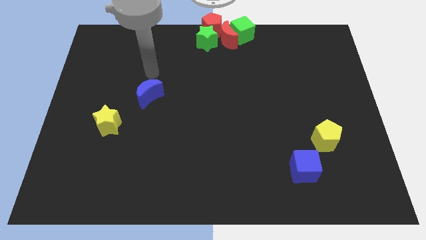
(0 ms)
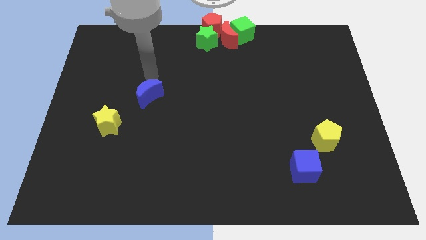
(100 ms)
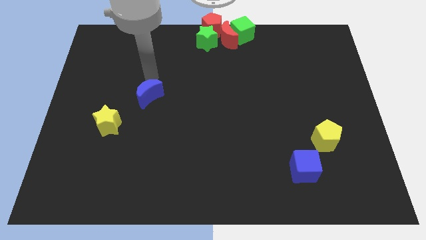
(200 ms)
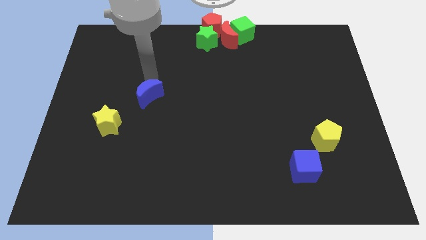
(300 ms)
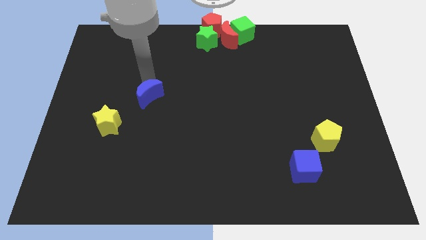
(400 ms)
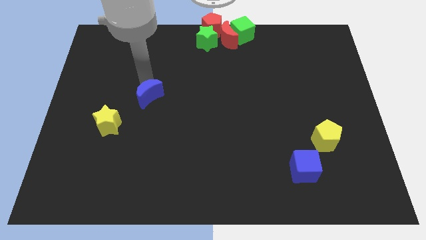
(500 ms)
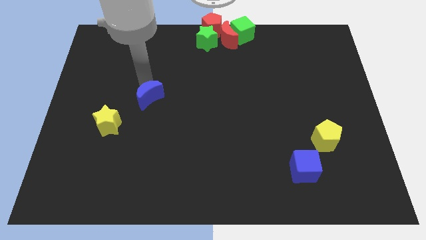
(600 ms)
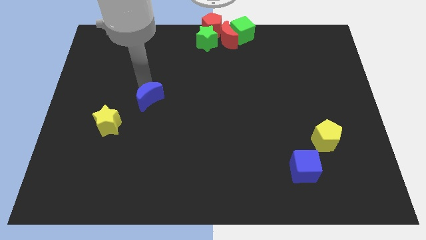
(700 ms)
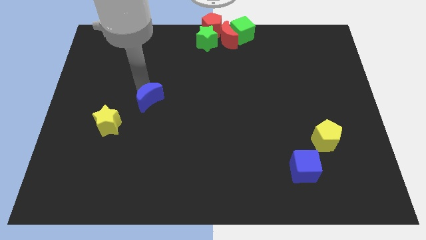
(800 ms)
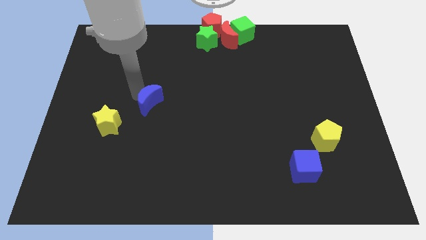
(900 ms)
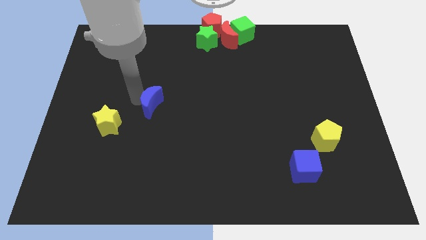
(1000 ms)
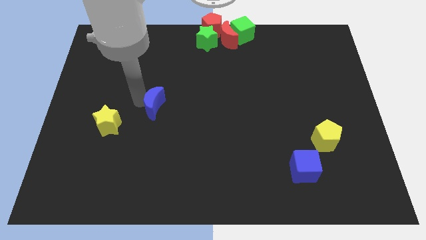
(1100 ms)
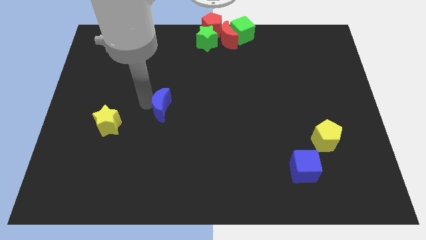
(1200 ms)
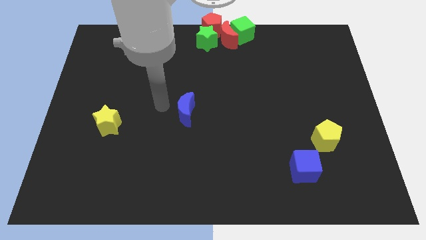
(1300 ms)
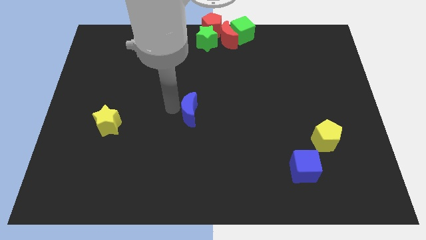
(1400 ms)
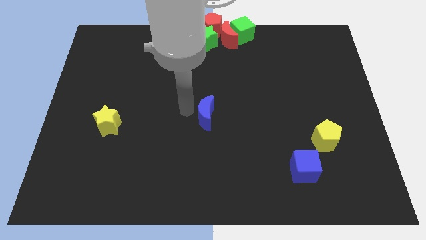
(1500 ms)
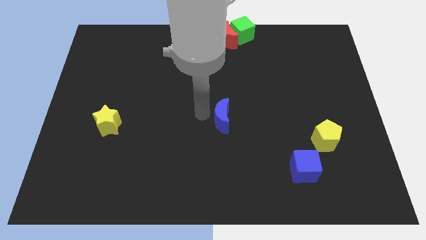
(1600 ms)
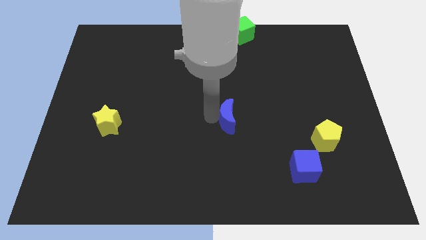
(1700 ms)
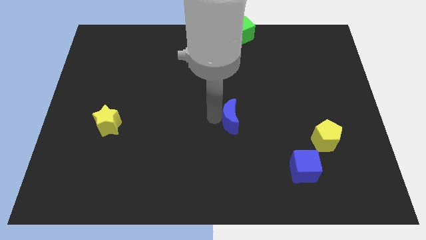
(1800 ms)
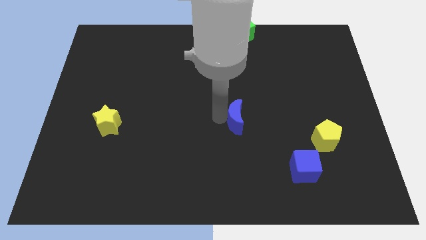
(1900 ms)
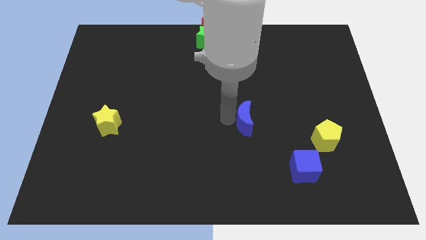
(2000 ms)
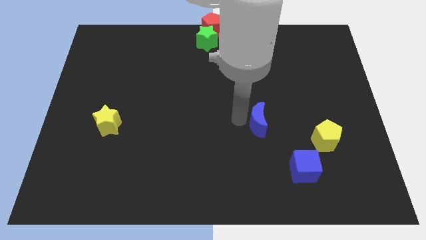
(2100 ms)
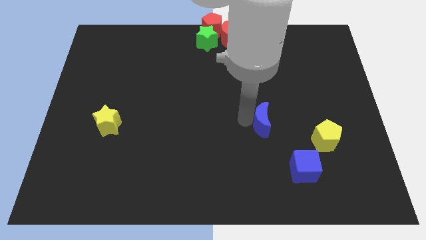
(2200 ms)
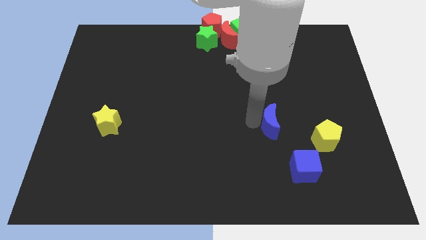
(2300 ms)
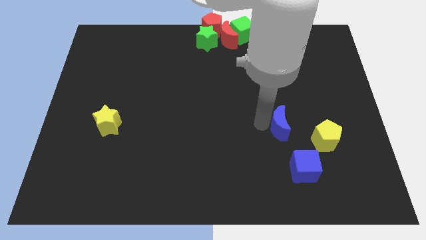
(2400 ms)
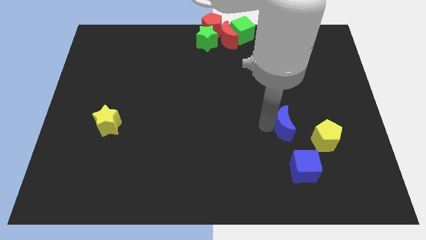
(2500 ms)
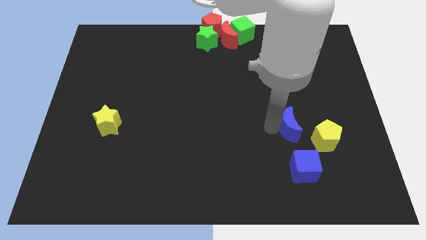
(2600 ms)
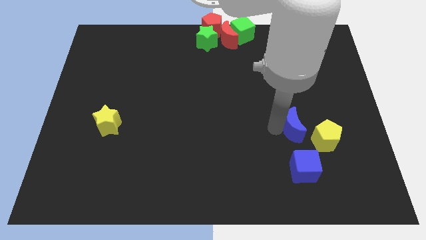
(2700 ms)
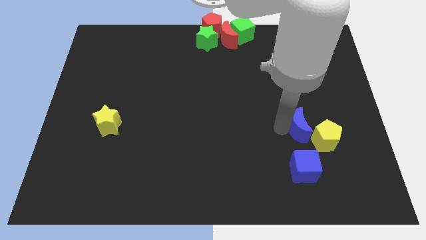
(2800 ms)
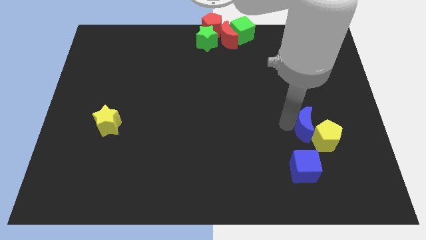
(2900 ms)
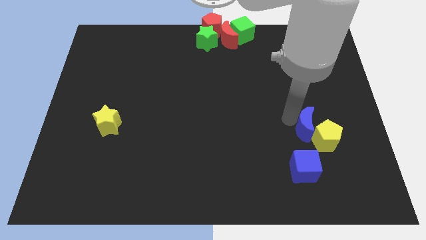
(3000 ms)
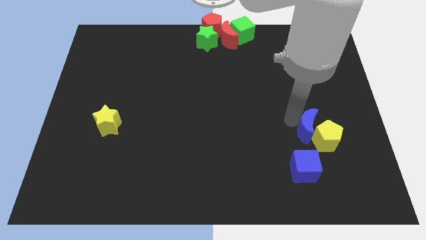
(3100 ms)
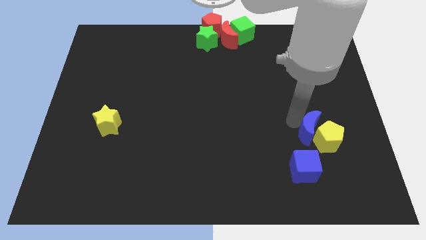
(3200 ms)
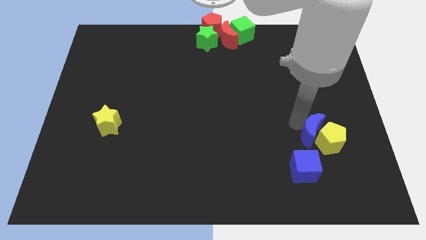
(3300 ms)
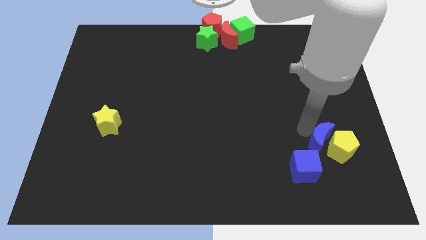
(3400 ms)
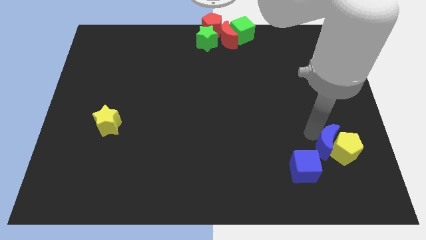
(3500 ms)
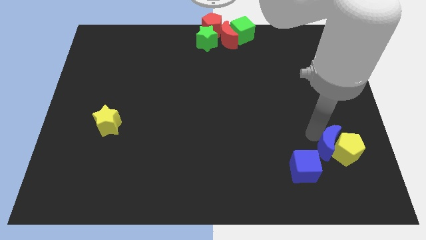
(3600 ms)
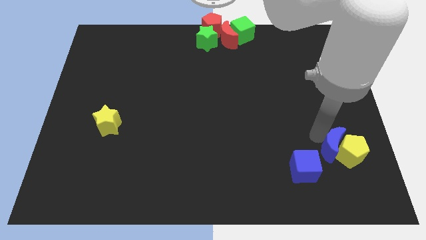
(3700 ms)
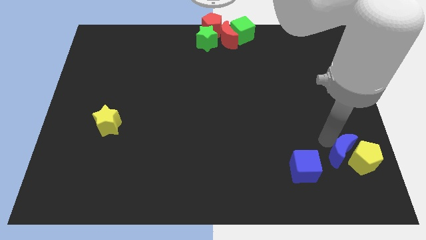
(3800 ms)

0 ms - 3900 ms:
push the blue crescent near the yellow pentagon

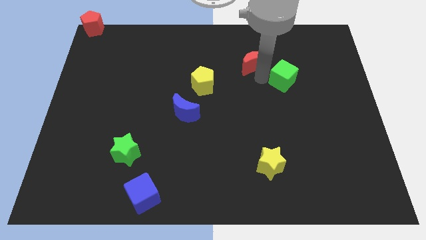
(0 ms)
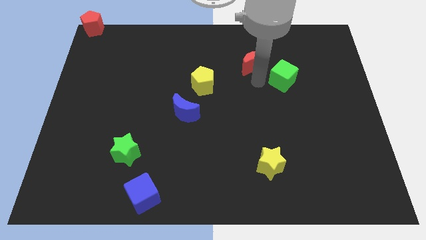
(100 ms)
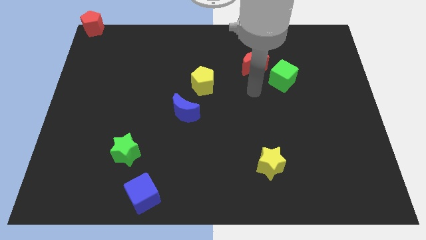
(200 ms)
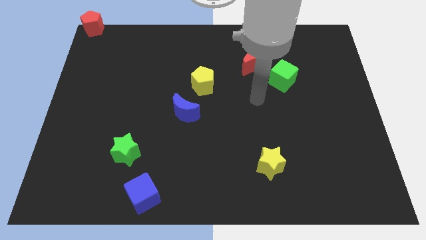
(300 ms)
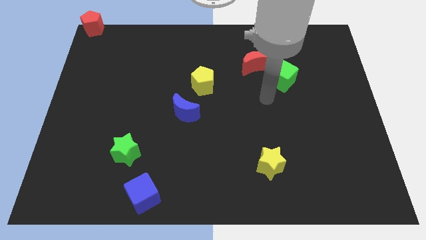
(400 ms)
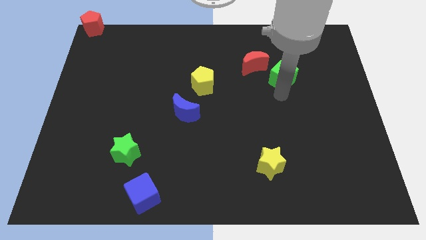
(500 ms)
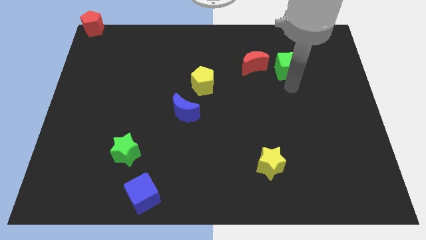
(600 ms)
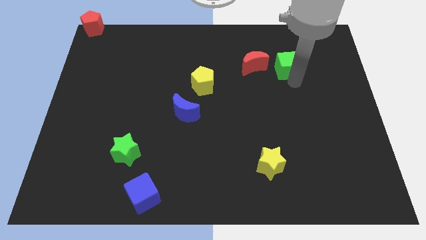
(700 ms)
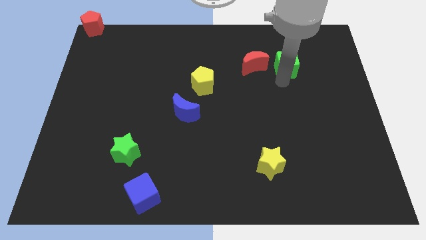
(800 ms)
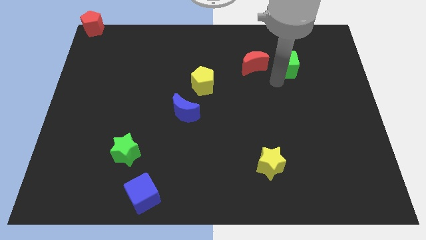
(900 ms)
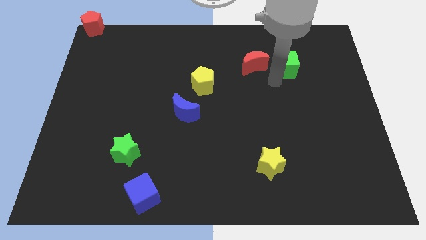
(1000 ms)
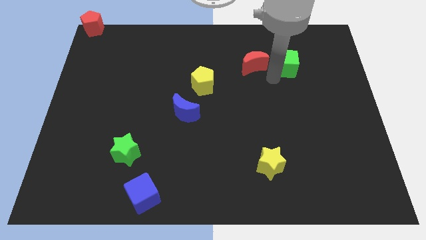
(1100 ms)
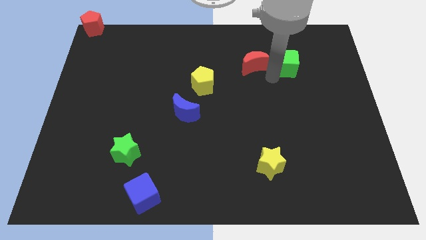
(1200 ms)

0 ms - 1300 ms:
push the green cube to the right of the red moon

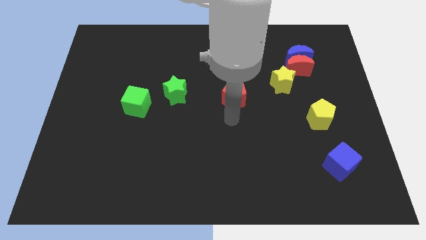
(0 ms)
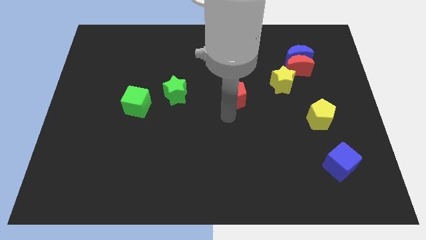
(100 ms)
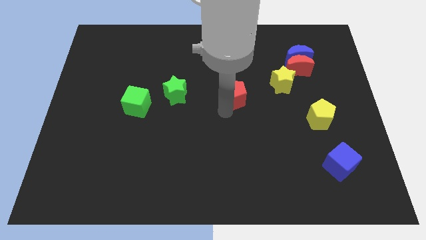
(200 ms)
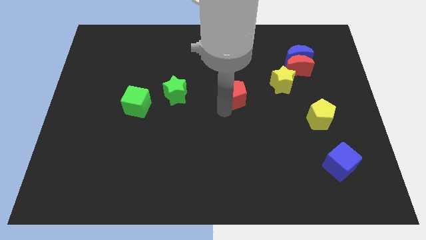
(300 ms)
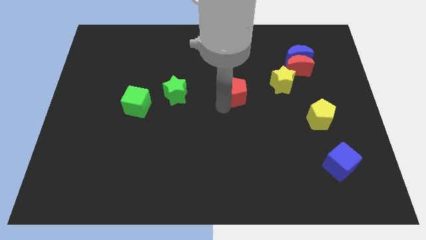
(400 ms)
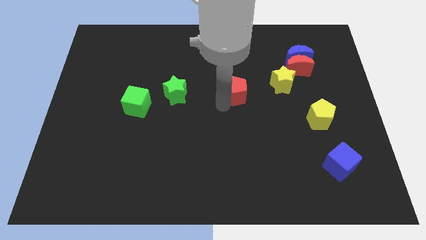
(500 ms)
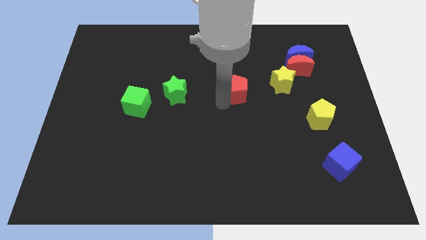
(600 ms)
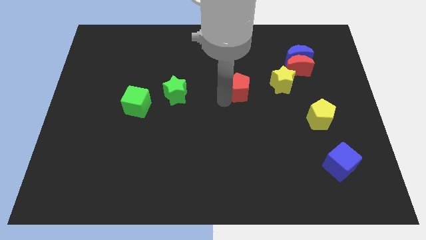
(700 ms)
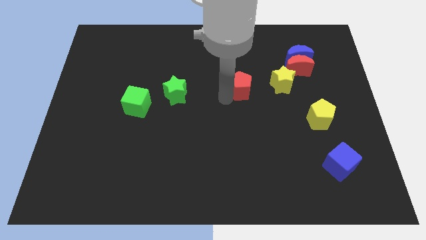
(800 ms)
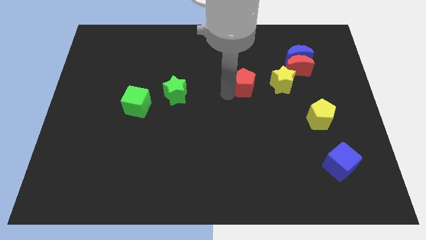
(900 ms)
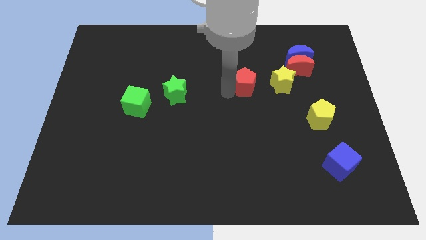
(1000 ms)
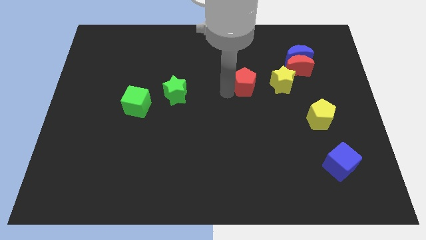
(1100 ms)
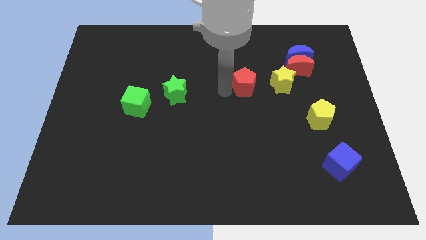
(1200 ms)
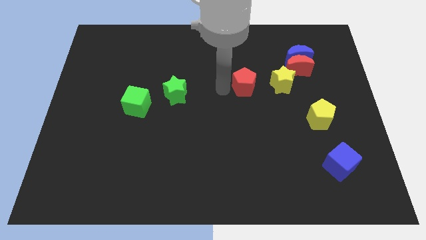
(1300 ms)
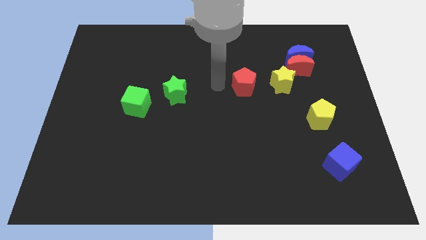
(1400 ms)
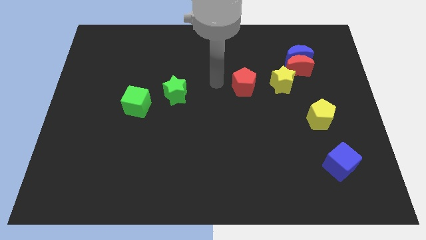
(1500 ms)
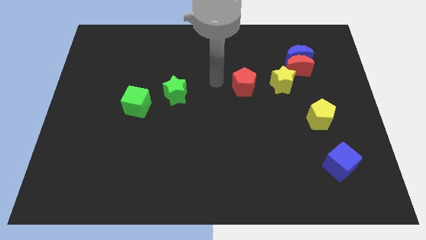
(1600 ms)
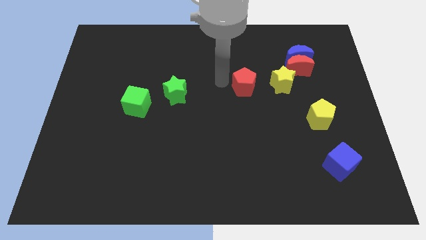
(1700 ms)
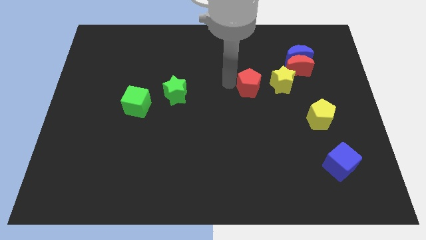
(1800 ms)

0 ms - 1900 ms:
place the red pentagon horizontally towards yellow star

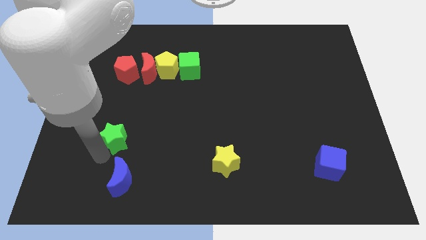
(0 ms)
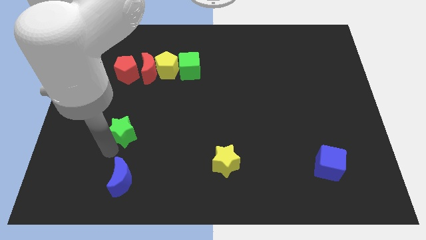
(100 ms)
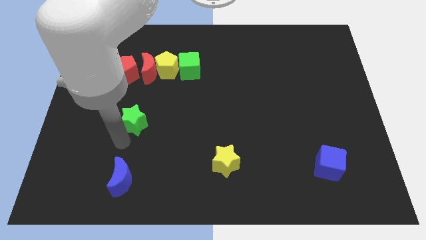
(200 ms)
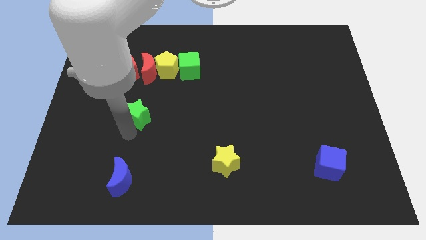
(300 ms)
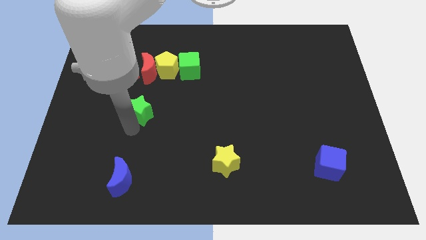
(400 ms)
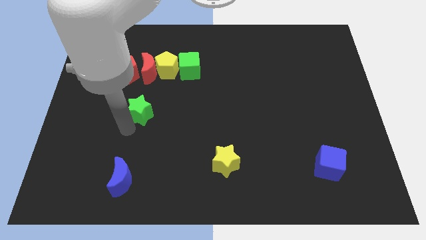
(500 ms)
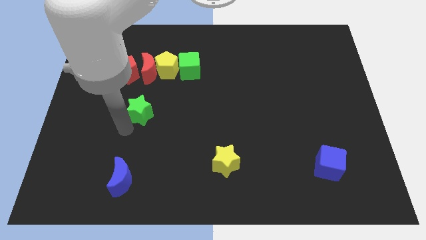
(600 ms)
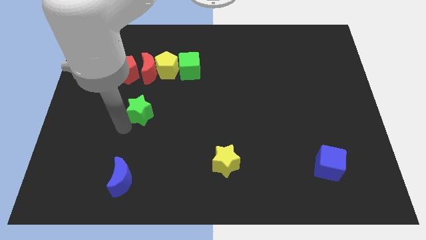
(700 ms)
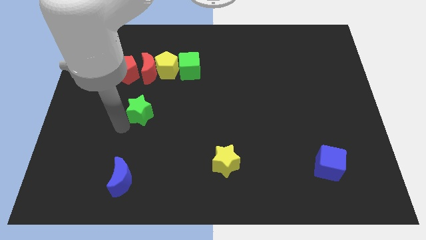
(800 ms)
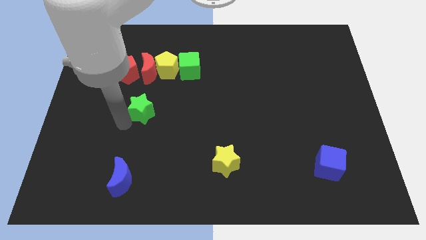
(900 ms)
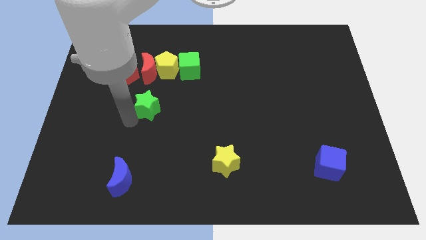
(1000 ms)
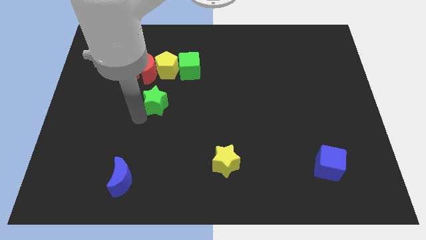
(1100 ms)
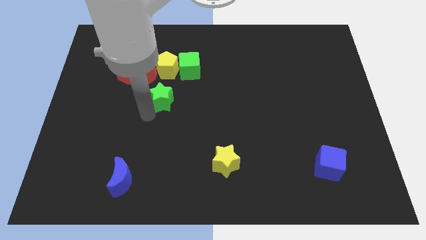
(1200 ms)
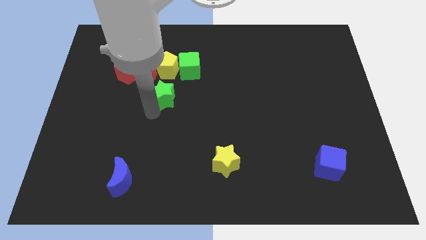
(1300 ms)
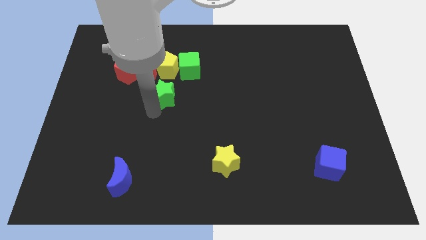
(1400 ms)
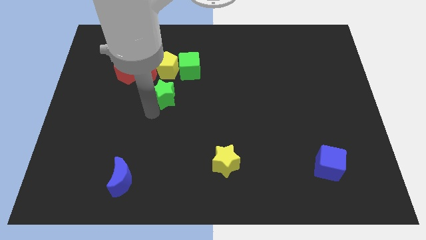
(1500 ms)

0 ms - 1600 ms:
put the green star at the bottom side of the yellow pentagon

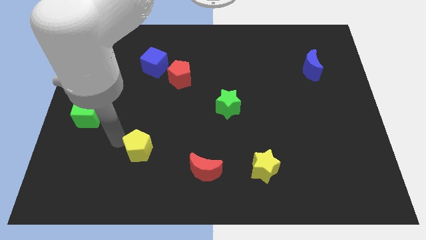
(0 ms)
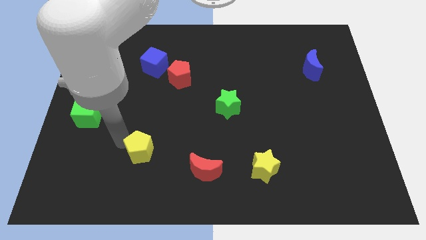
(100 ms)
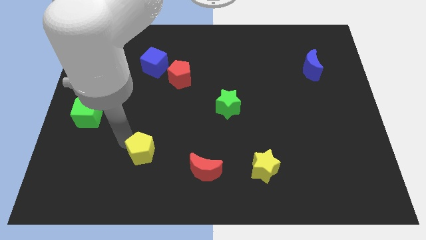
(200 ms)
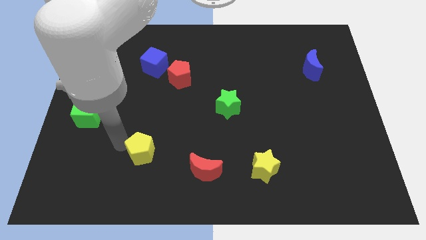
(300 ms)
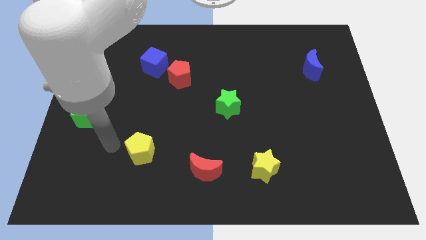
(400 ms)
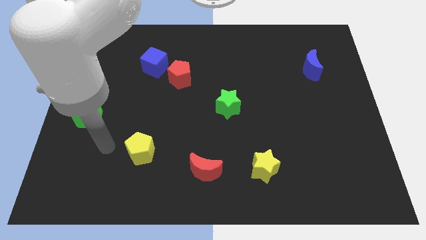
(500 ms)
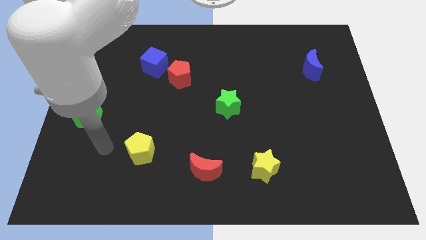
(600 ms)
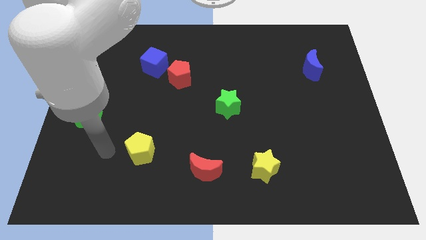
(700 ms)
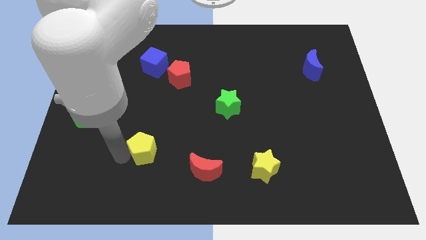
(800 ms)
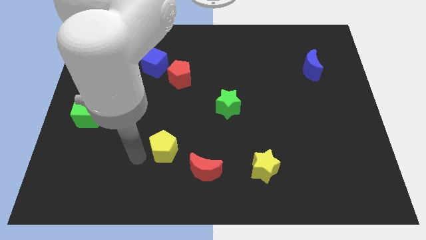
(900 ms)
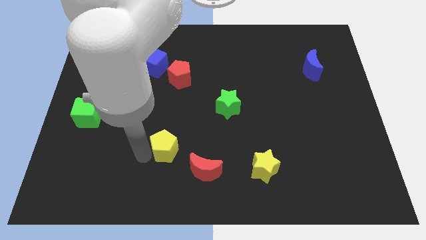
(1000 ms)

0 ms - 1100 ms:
push yellow pentagon below red pentagon
